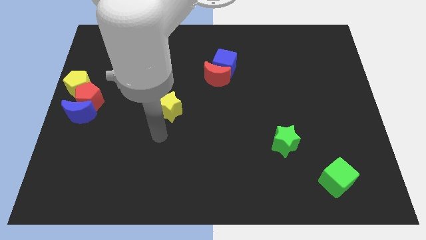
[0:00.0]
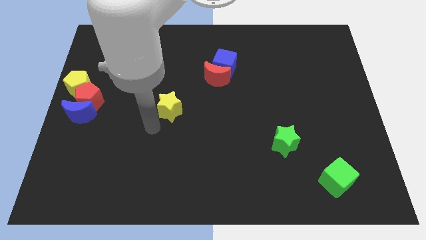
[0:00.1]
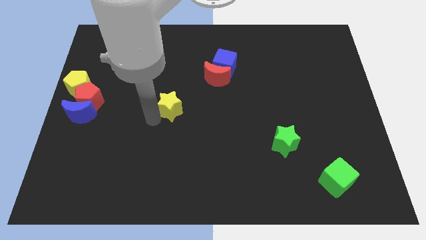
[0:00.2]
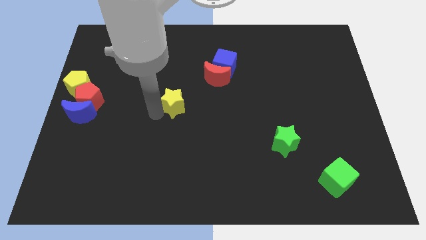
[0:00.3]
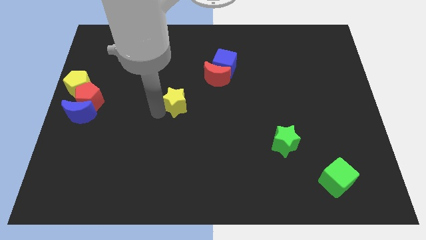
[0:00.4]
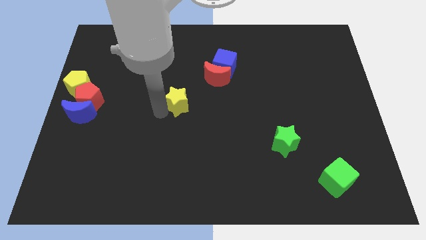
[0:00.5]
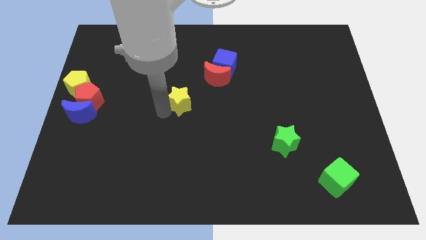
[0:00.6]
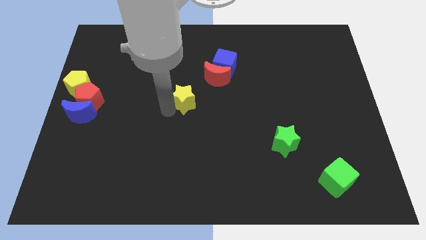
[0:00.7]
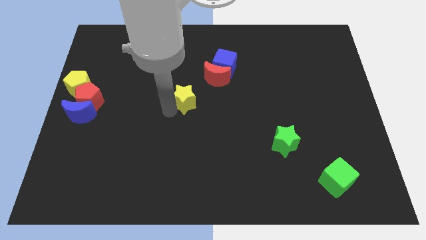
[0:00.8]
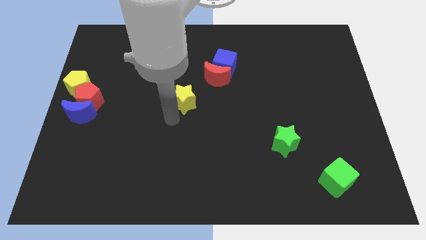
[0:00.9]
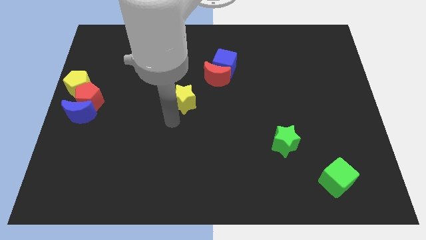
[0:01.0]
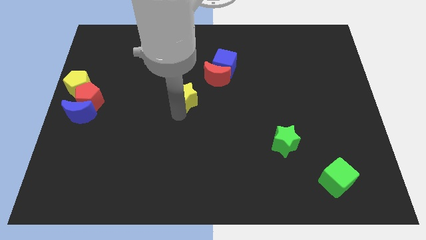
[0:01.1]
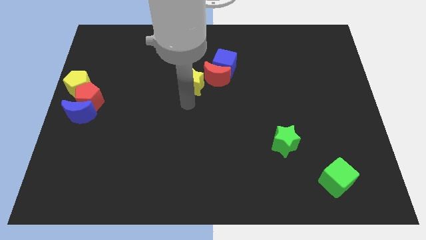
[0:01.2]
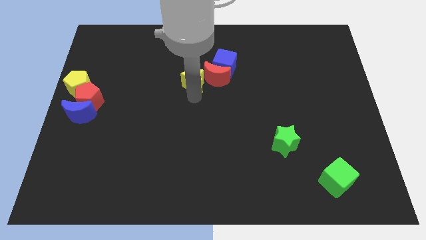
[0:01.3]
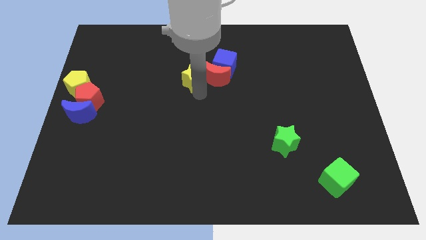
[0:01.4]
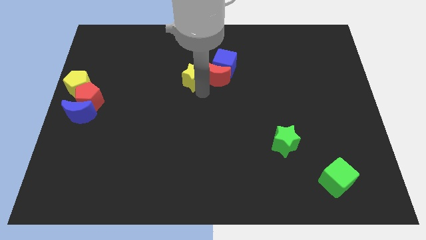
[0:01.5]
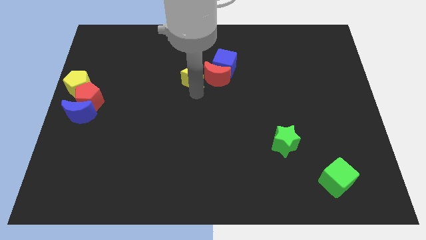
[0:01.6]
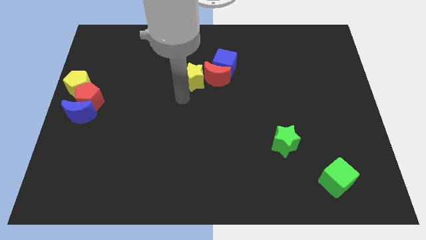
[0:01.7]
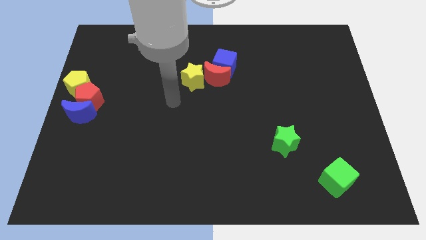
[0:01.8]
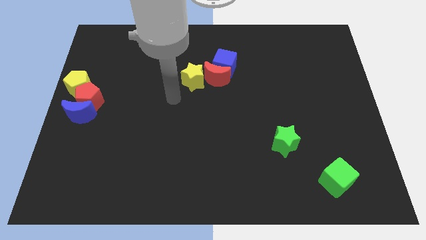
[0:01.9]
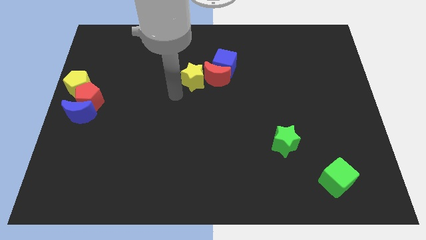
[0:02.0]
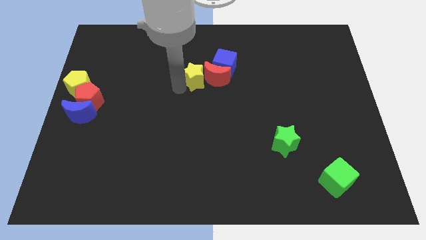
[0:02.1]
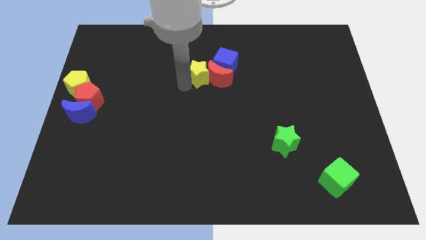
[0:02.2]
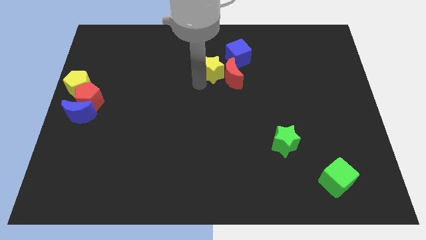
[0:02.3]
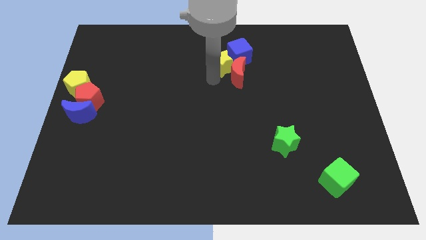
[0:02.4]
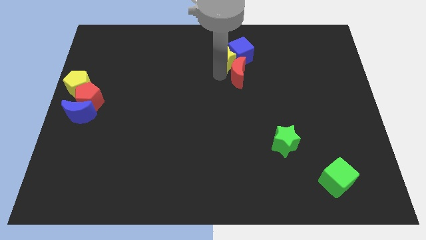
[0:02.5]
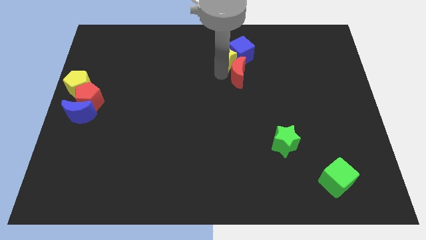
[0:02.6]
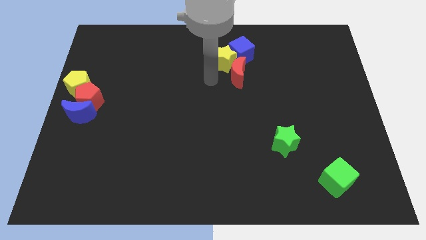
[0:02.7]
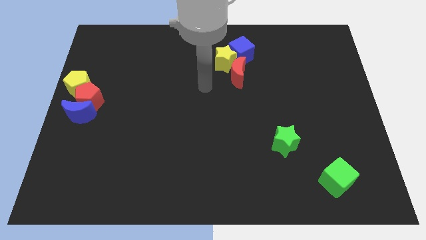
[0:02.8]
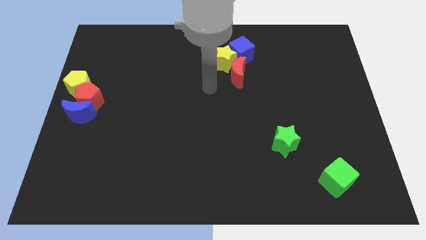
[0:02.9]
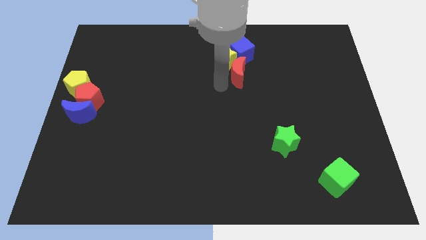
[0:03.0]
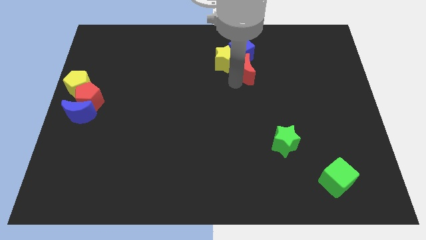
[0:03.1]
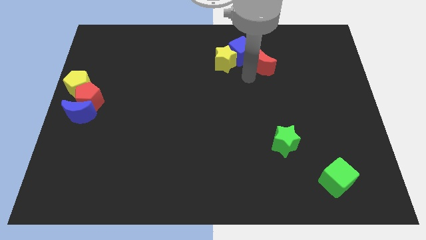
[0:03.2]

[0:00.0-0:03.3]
push the yellow star into the blue cube

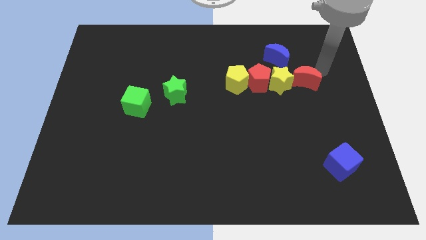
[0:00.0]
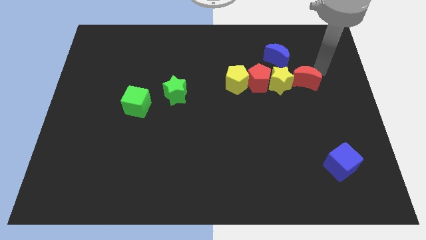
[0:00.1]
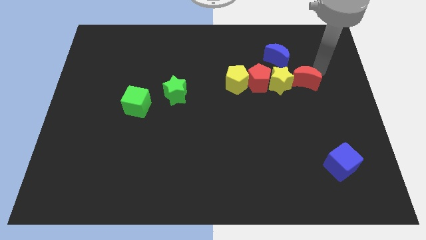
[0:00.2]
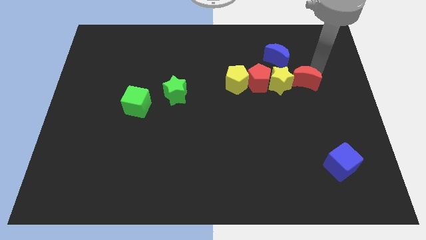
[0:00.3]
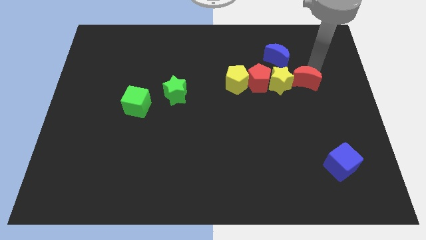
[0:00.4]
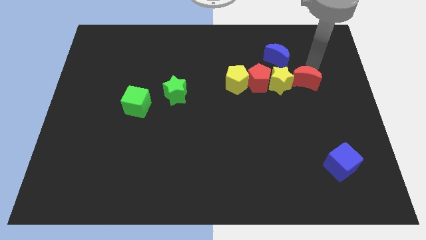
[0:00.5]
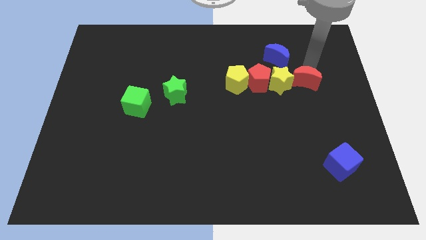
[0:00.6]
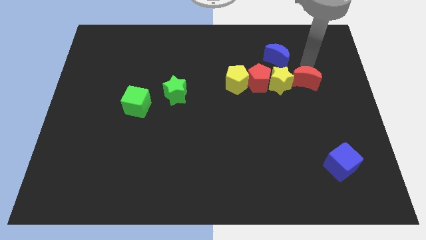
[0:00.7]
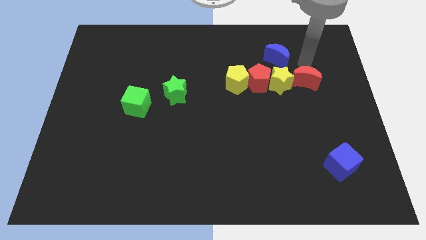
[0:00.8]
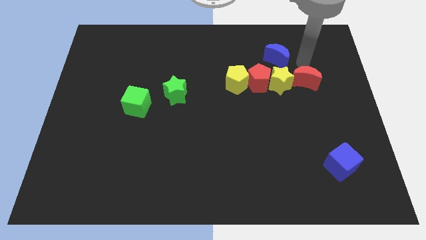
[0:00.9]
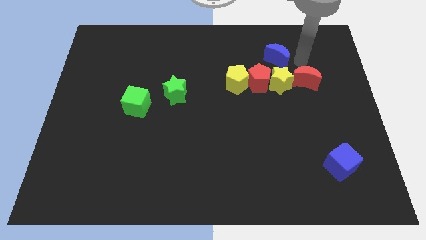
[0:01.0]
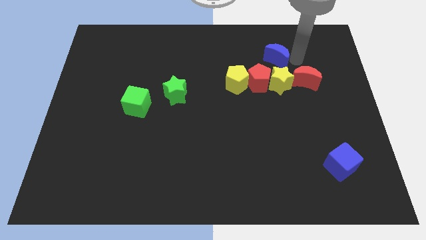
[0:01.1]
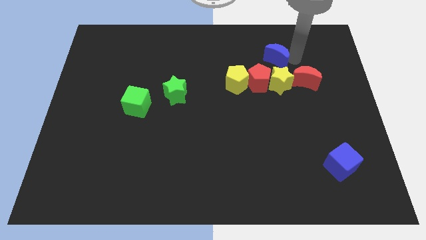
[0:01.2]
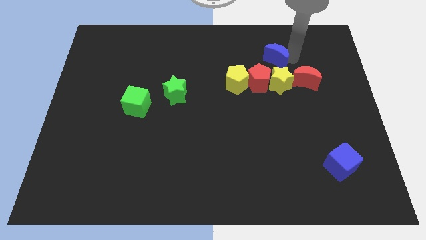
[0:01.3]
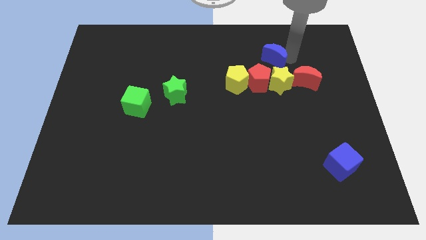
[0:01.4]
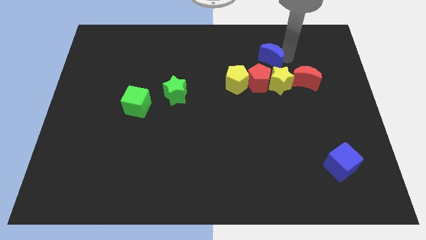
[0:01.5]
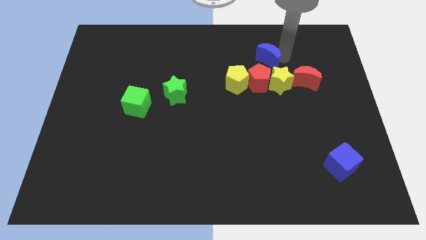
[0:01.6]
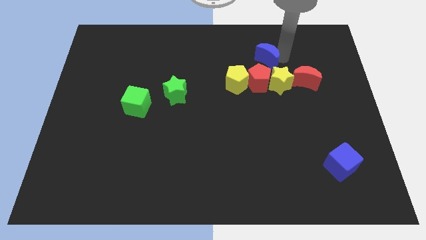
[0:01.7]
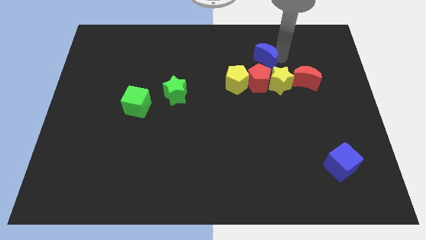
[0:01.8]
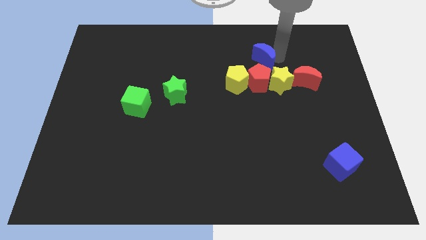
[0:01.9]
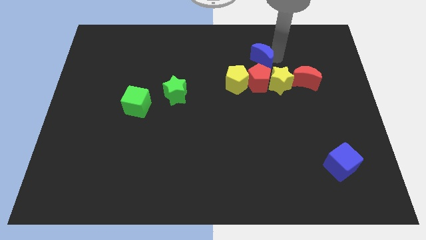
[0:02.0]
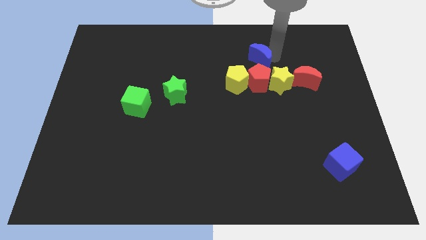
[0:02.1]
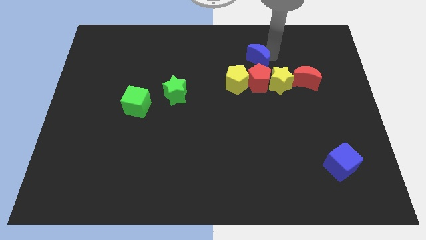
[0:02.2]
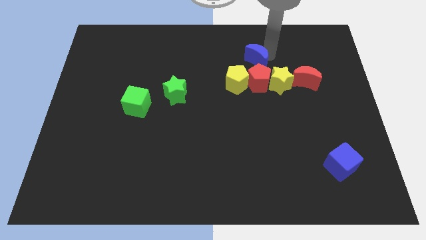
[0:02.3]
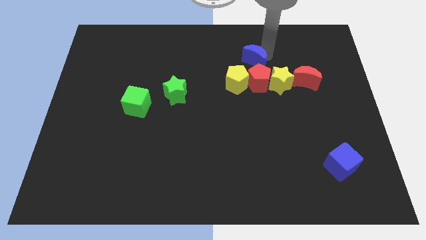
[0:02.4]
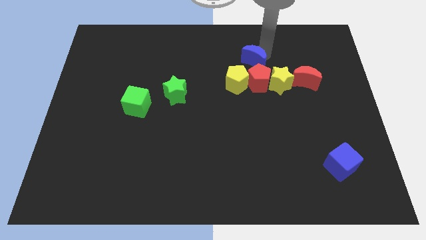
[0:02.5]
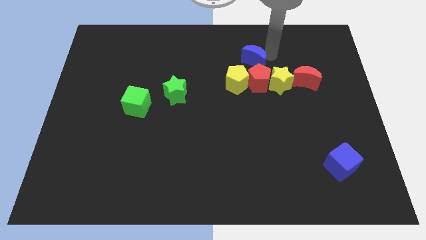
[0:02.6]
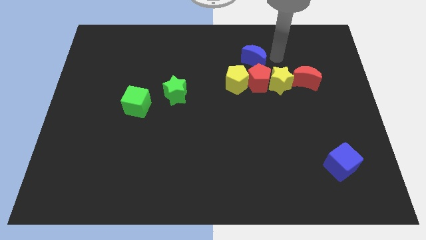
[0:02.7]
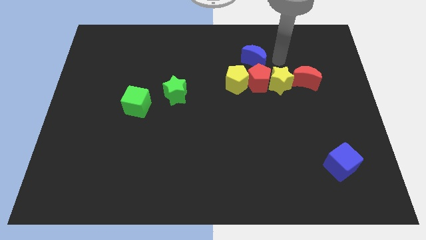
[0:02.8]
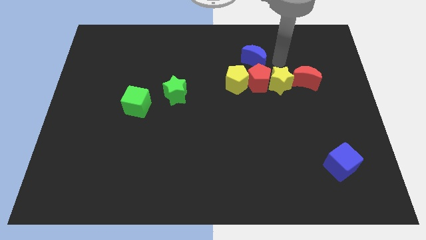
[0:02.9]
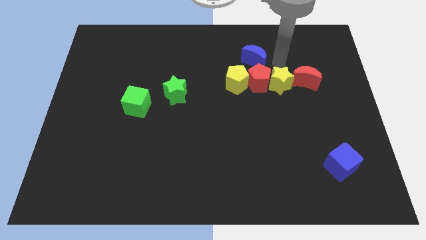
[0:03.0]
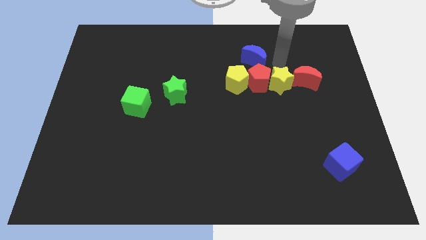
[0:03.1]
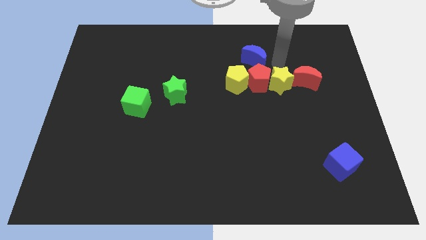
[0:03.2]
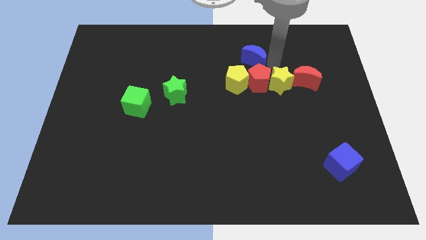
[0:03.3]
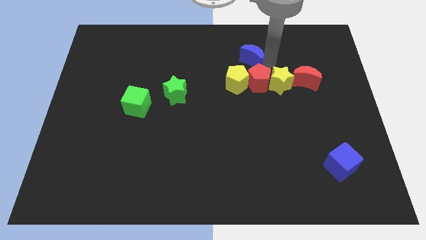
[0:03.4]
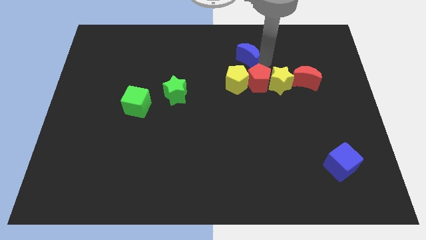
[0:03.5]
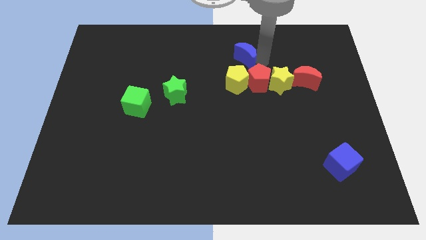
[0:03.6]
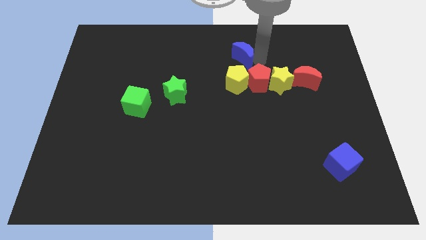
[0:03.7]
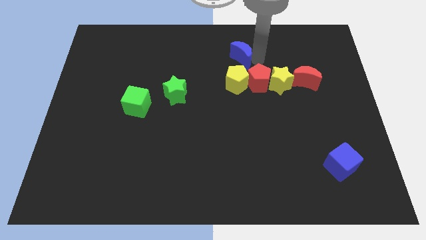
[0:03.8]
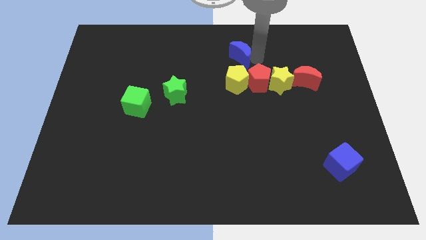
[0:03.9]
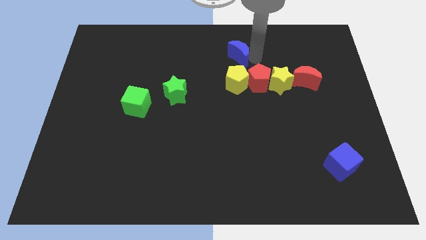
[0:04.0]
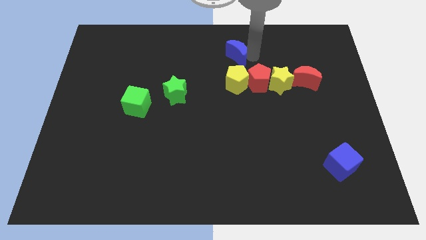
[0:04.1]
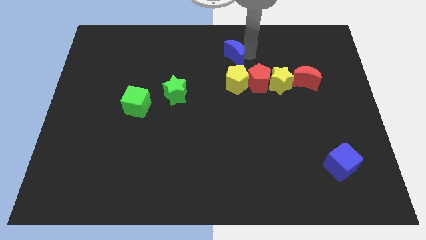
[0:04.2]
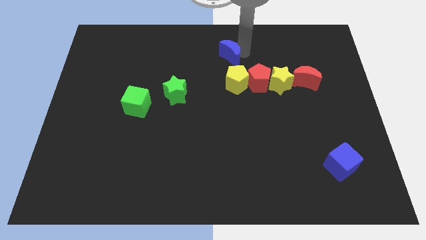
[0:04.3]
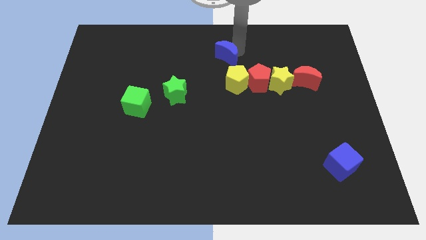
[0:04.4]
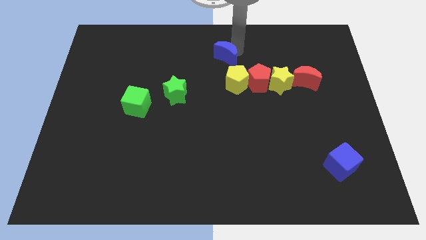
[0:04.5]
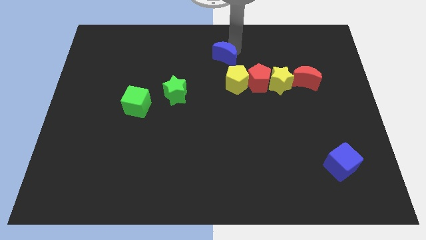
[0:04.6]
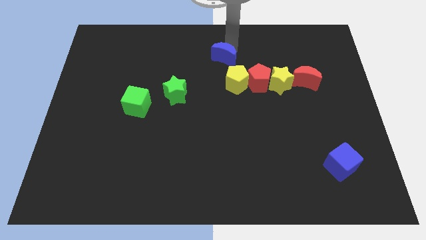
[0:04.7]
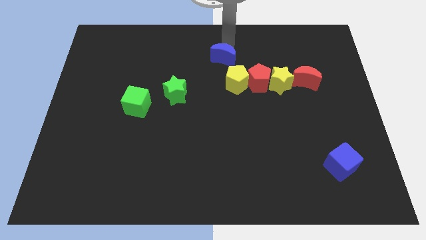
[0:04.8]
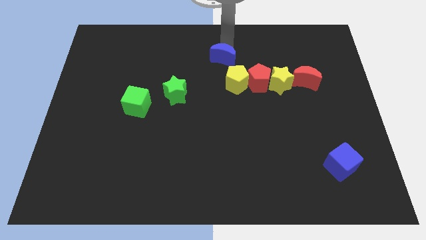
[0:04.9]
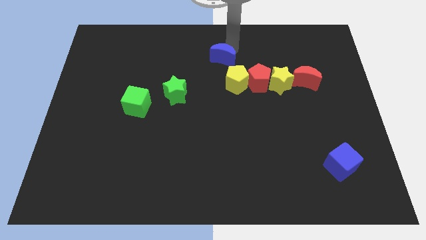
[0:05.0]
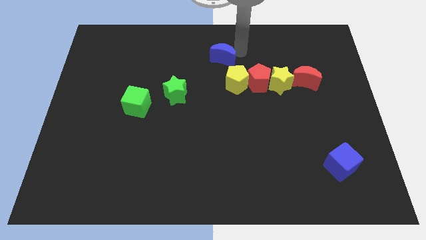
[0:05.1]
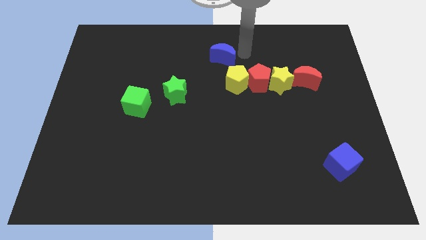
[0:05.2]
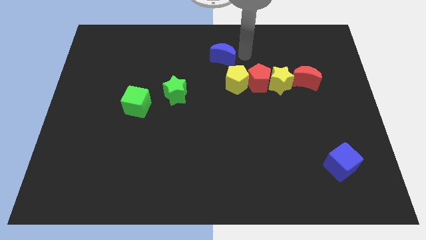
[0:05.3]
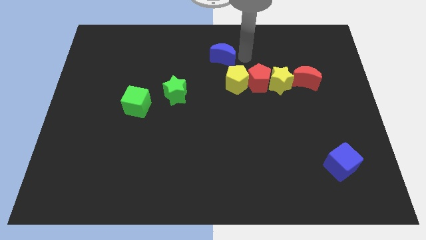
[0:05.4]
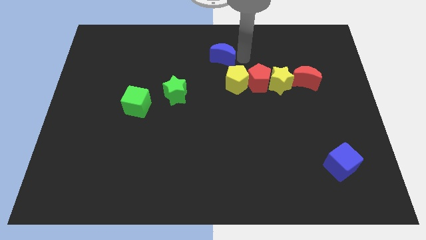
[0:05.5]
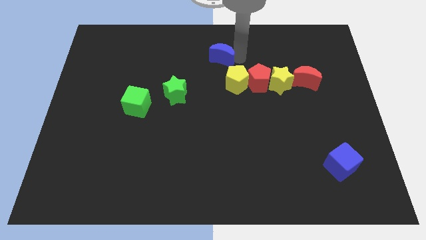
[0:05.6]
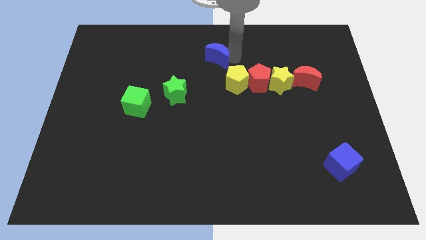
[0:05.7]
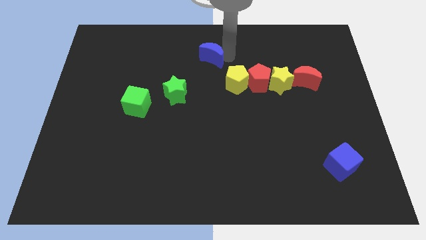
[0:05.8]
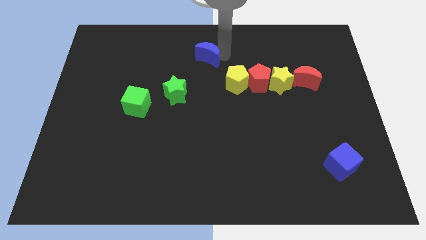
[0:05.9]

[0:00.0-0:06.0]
place blue moon to the top left of the yellow pentagon
